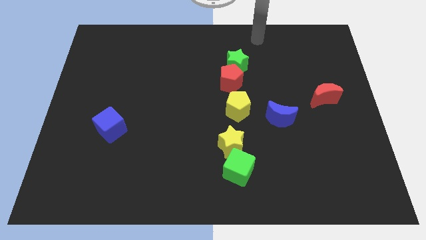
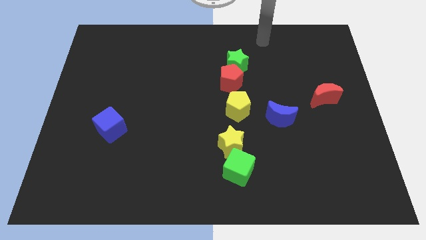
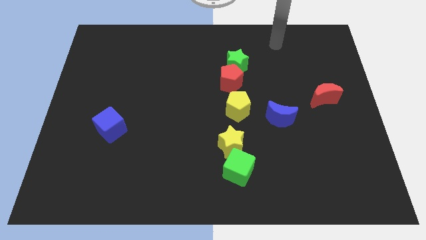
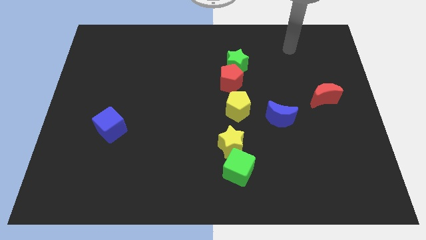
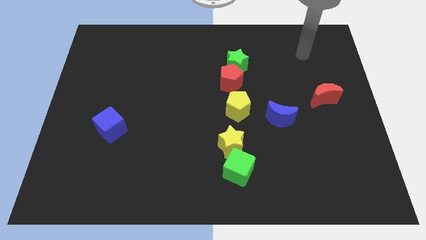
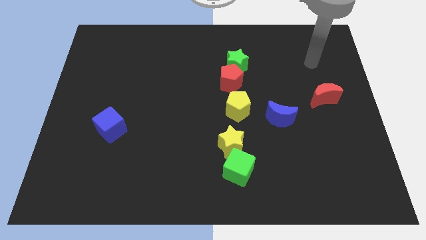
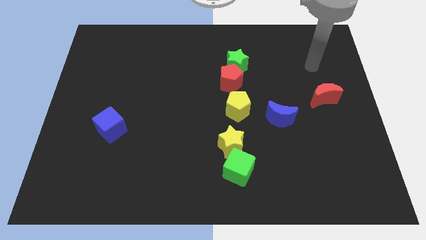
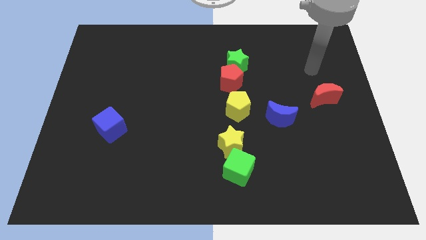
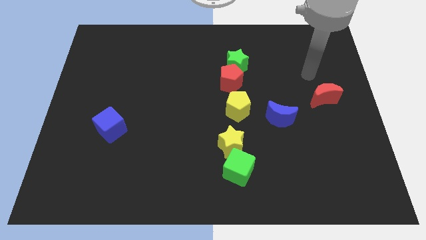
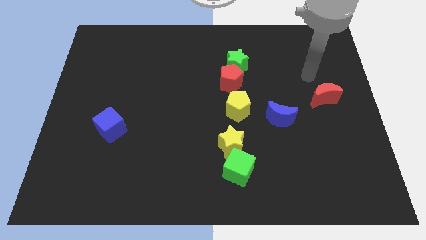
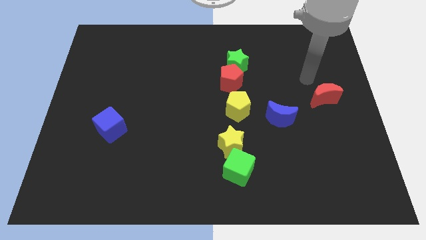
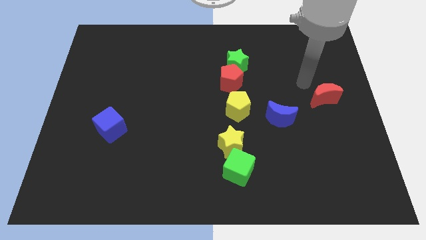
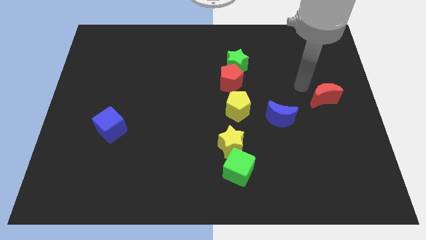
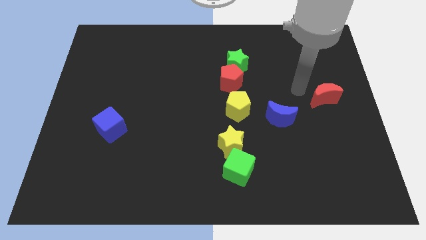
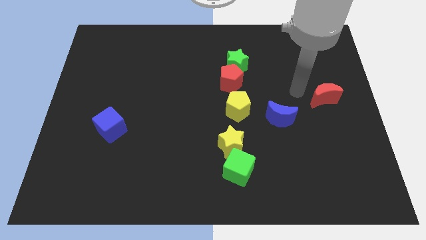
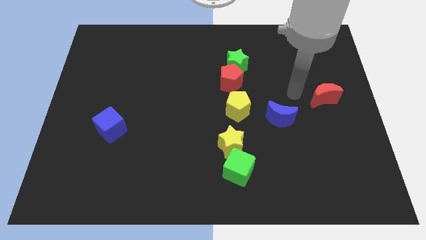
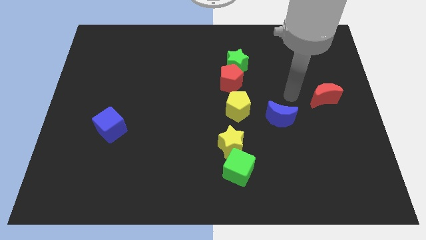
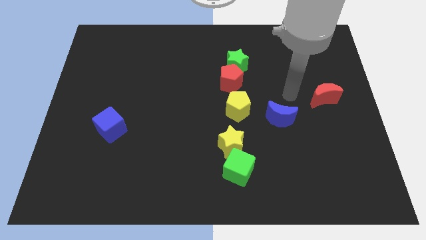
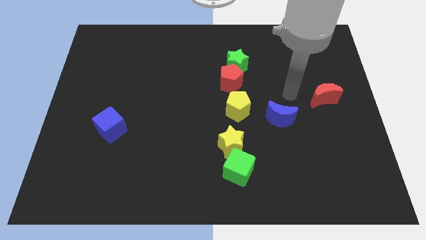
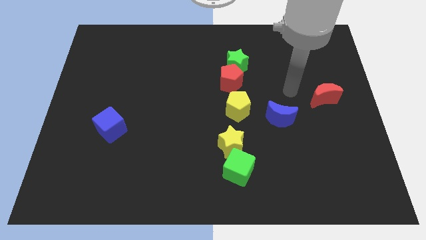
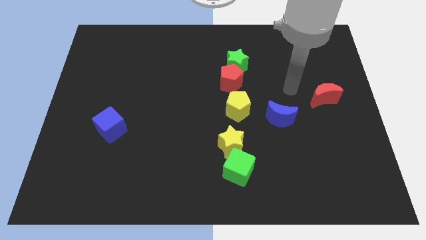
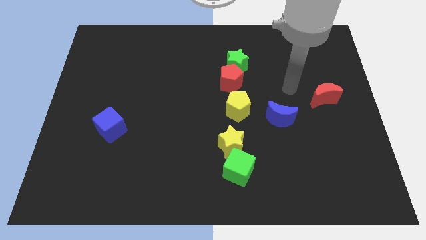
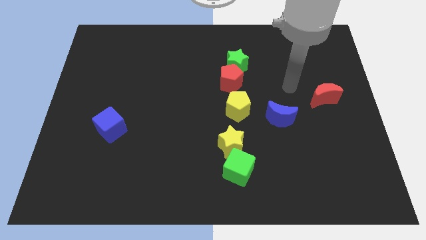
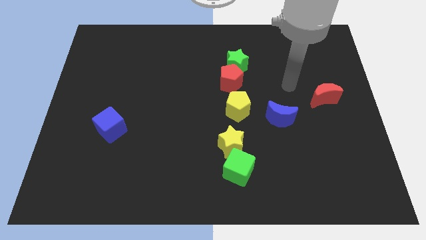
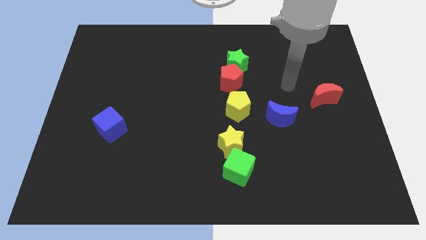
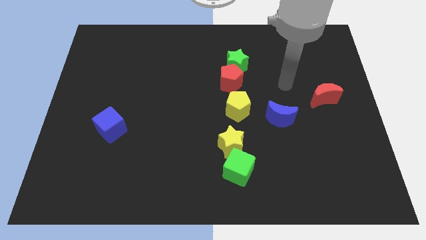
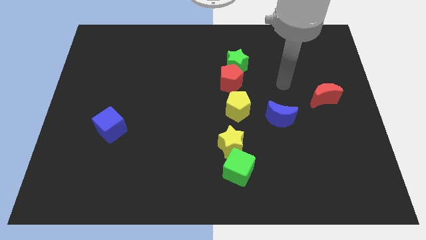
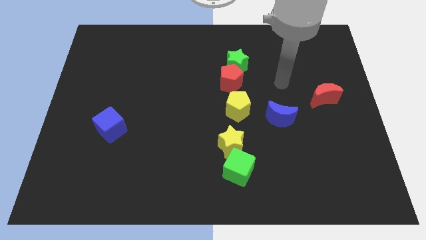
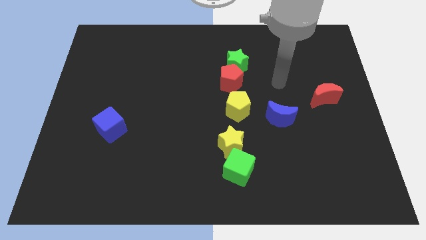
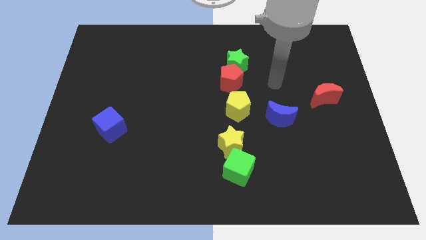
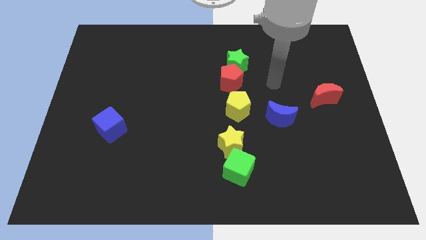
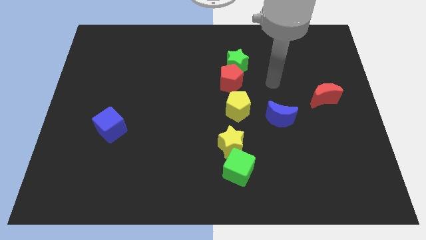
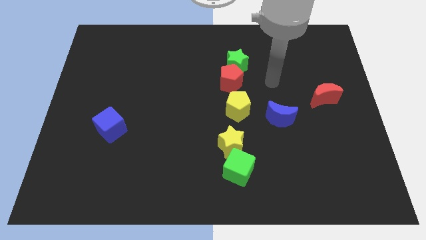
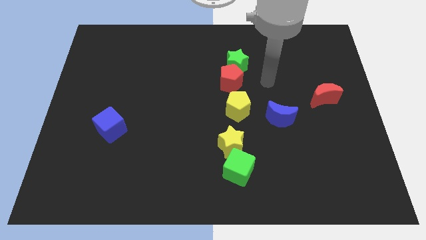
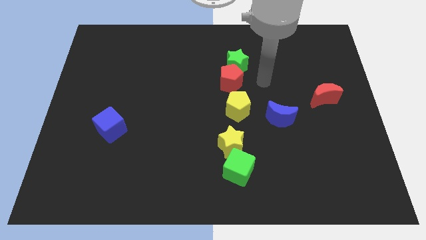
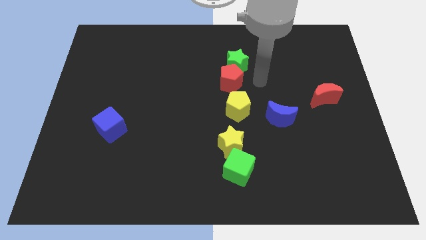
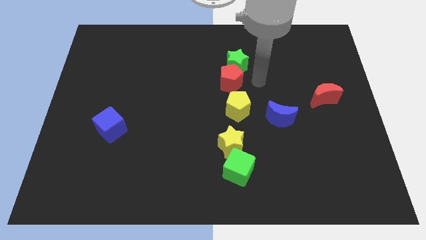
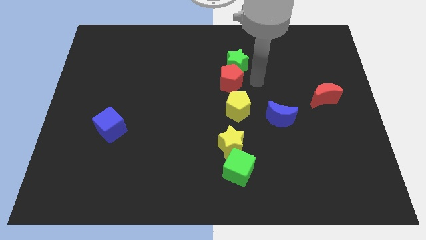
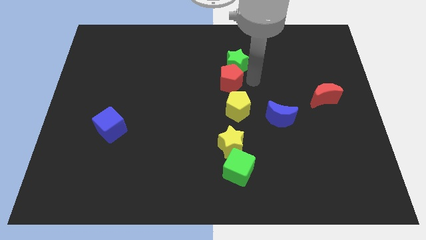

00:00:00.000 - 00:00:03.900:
move your arm towards the red pentagon

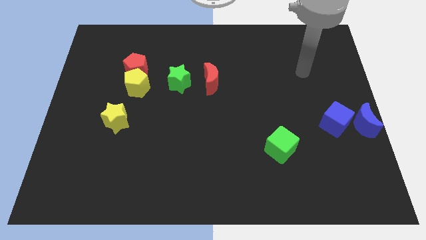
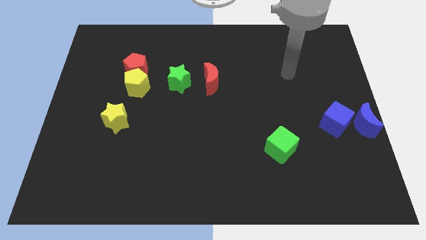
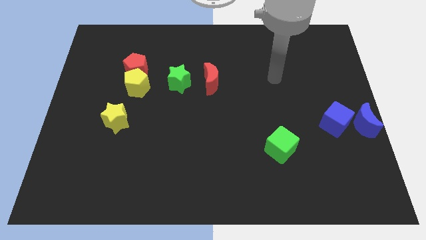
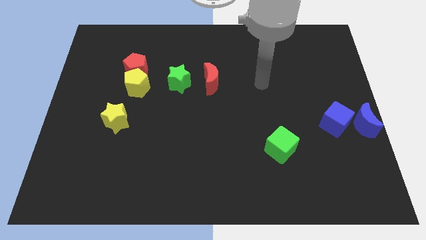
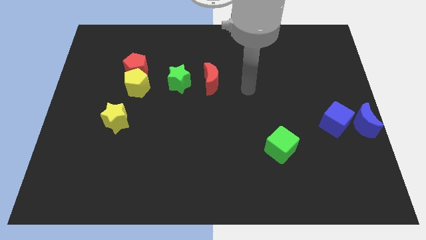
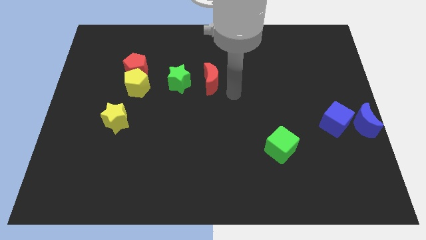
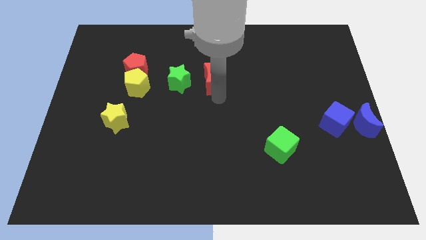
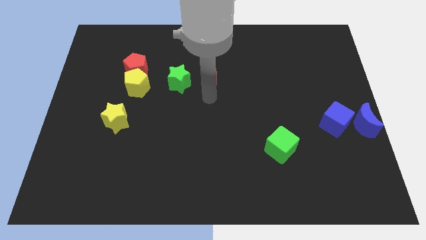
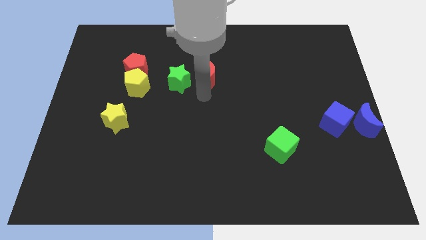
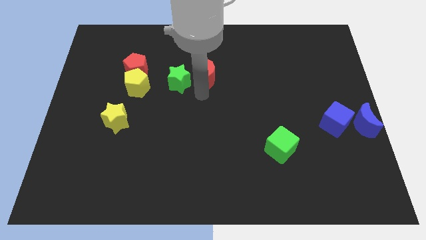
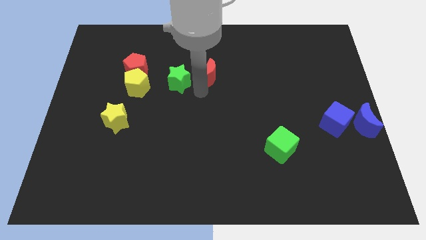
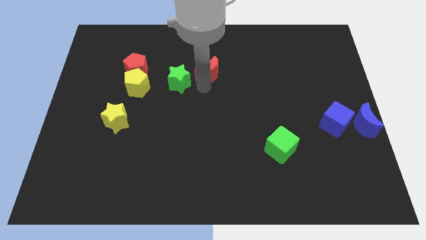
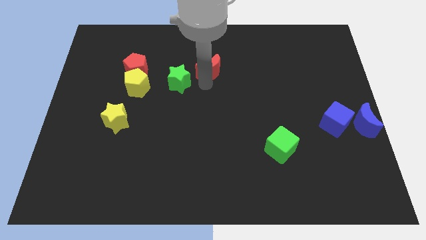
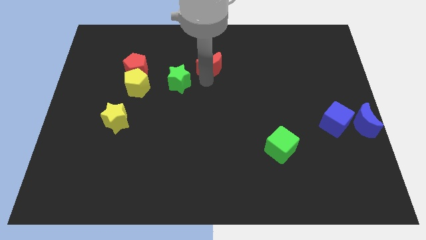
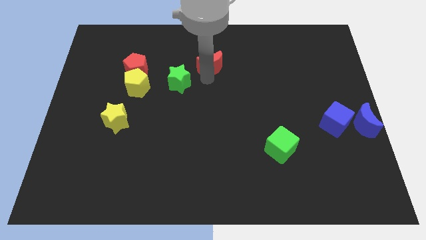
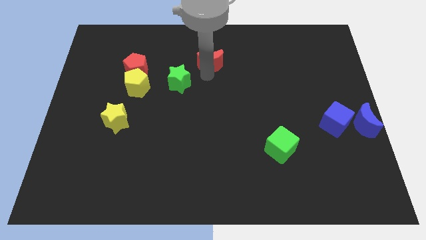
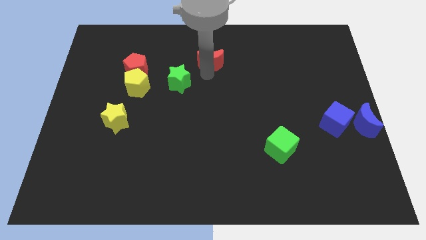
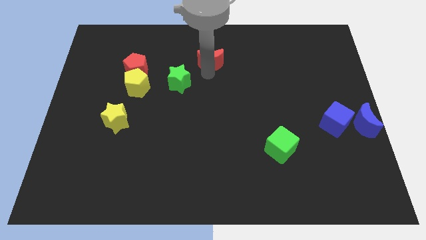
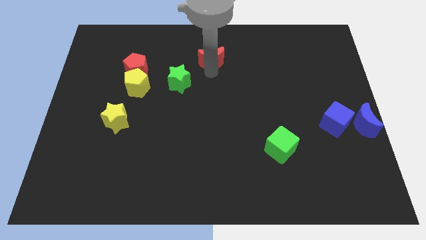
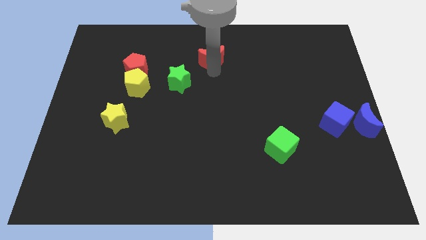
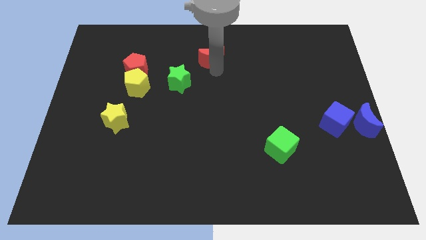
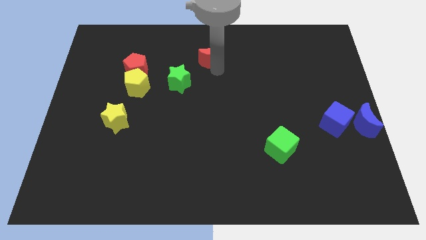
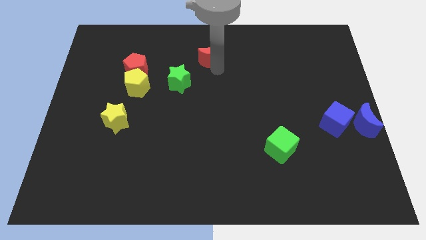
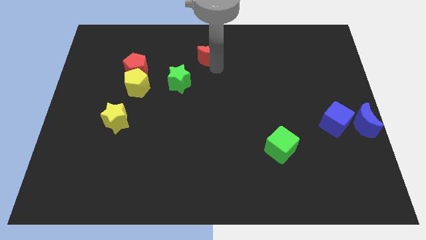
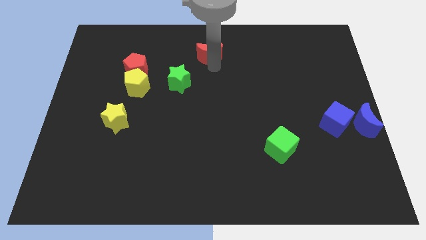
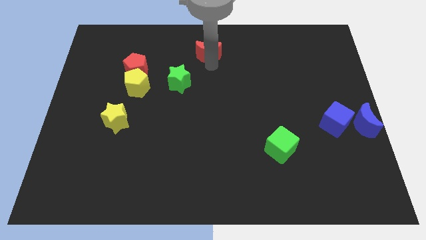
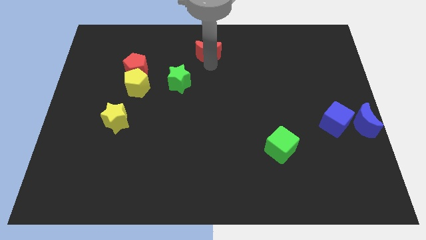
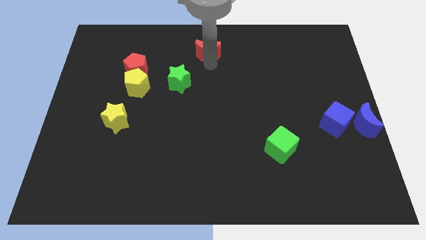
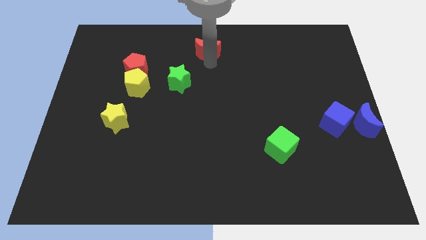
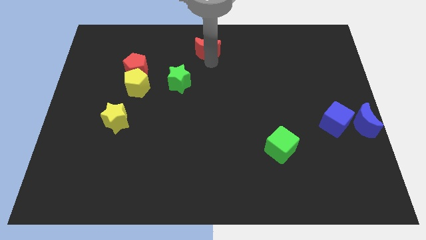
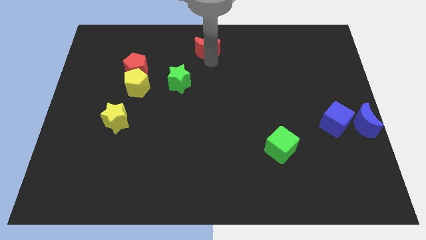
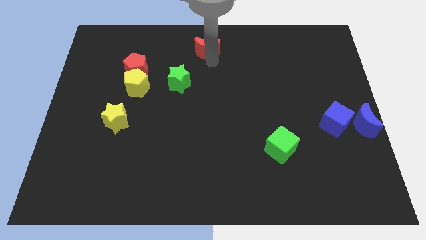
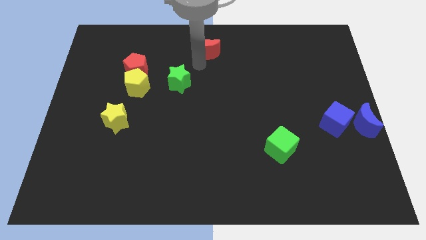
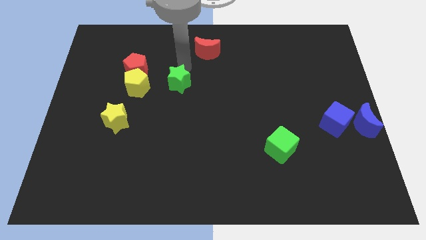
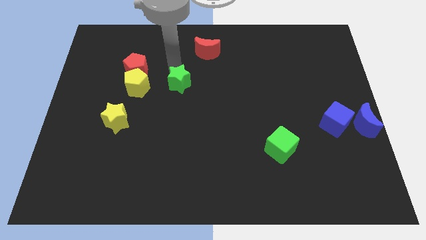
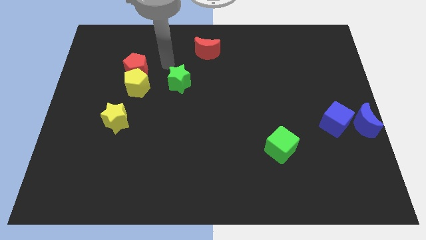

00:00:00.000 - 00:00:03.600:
push the red crescent towards up

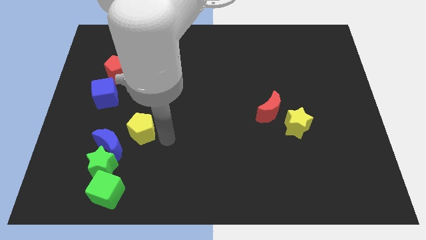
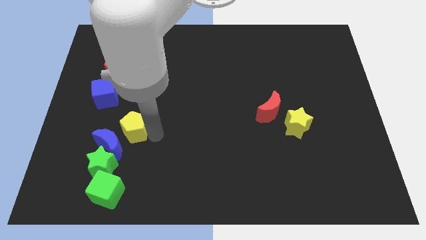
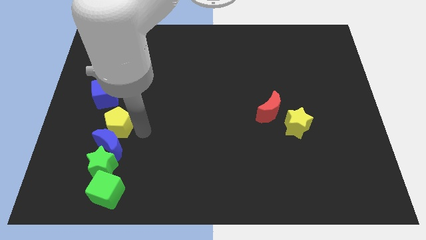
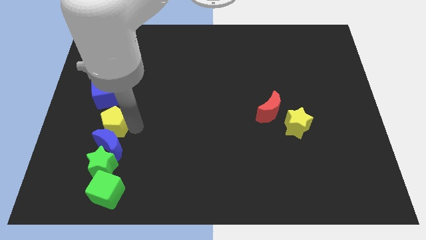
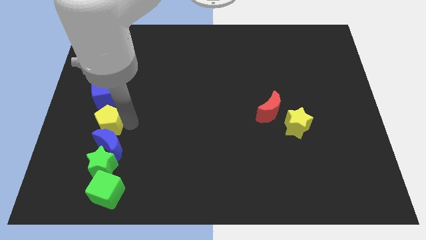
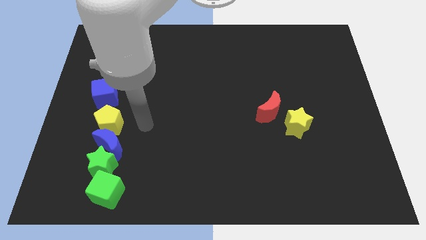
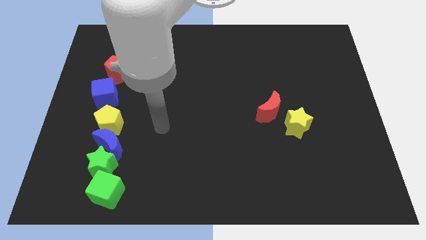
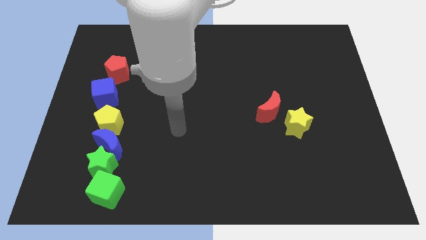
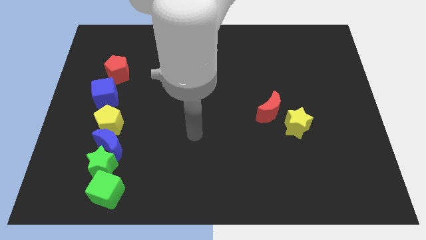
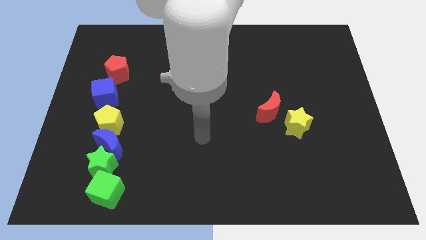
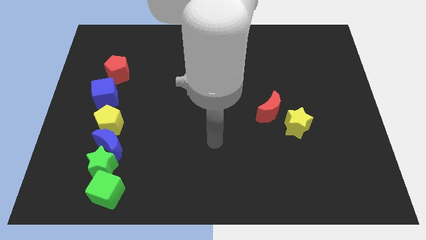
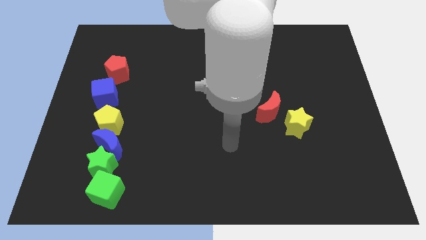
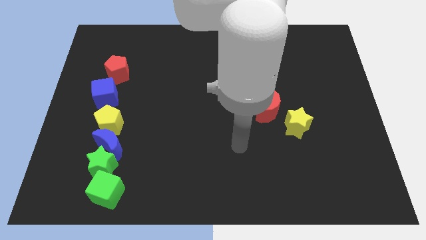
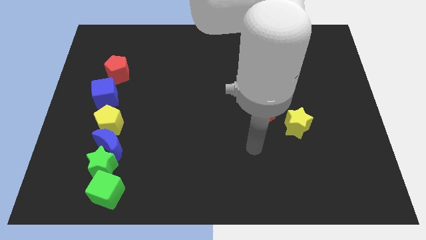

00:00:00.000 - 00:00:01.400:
put the yellow pentagon to the top of the blue crescent

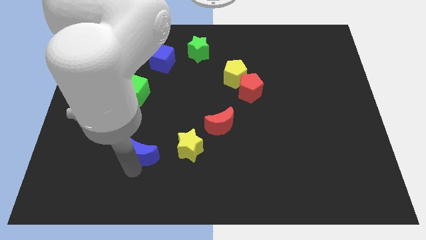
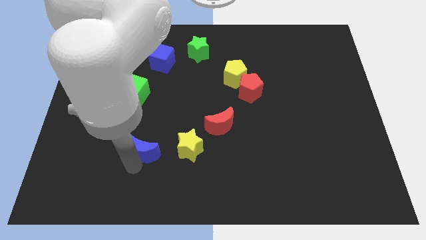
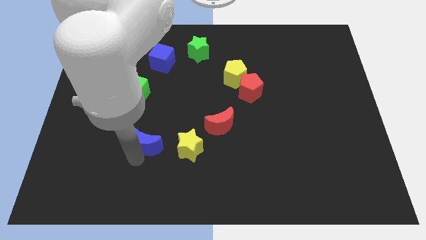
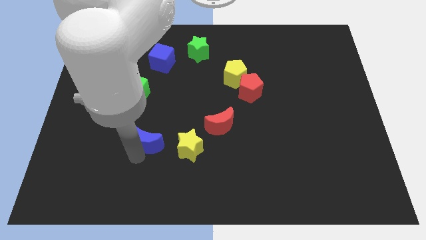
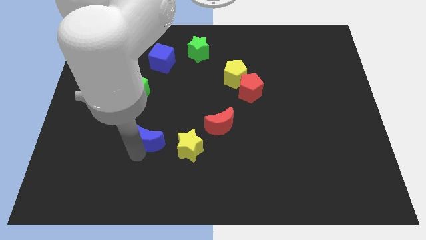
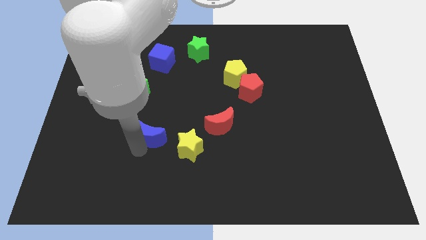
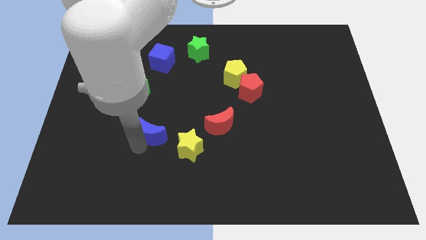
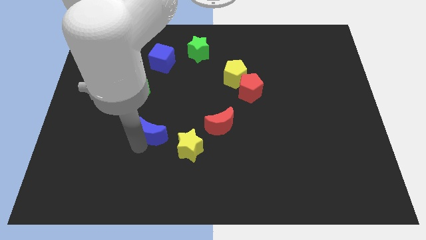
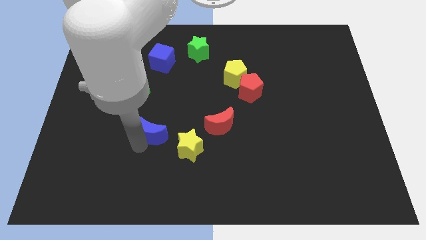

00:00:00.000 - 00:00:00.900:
push the blue moon towards the top side to form a circle
